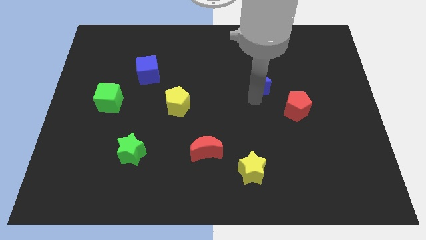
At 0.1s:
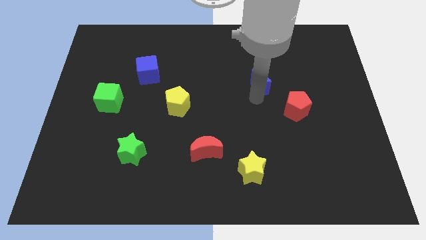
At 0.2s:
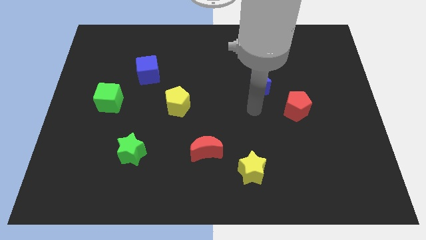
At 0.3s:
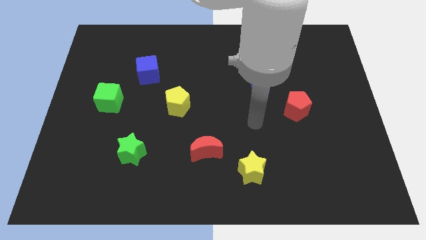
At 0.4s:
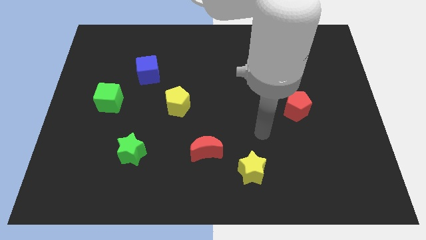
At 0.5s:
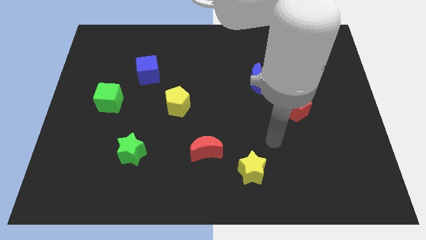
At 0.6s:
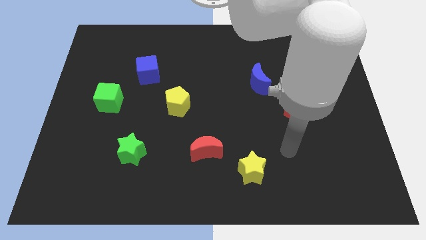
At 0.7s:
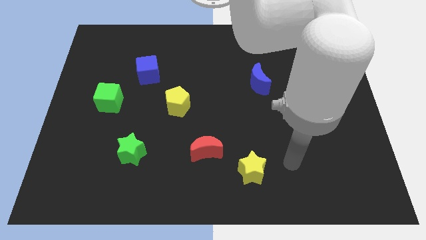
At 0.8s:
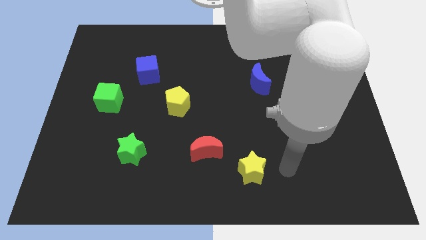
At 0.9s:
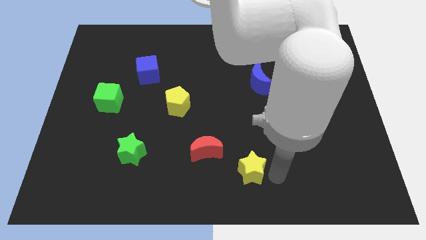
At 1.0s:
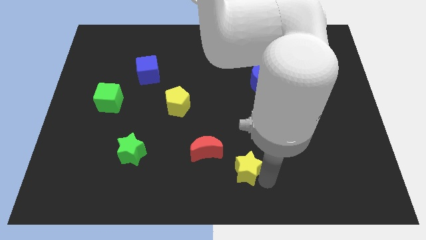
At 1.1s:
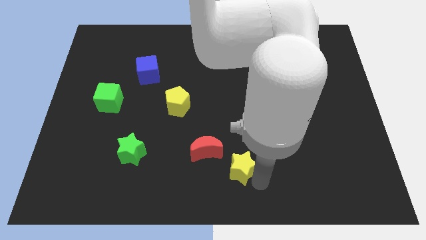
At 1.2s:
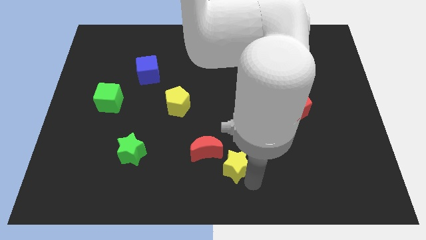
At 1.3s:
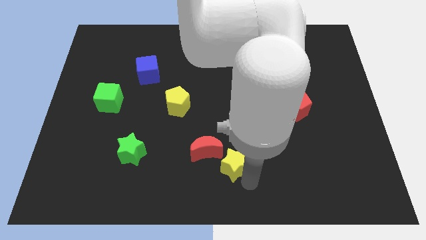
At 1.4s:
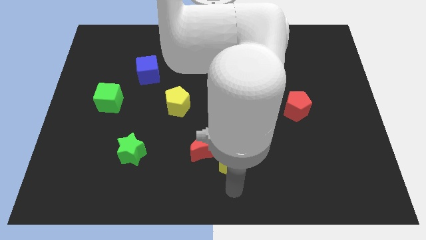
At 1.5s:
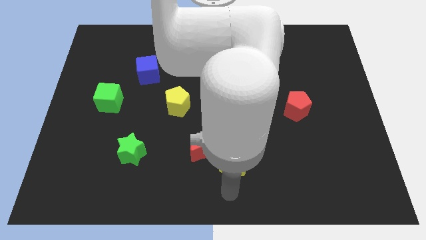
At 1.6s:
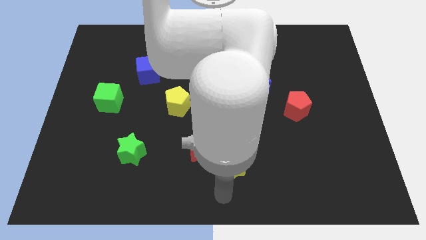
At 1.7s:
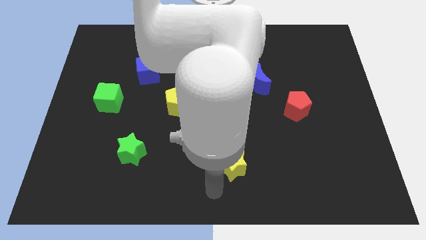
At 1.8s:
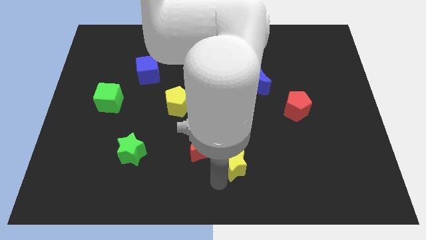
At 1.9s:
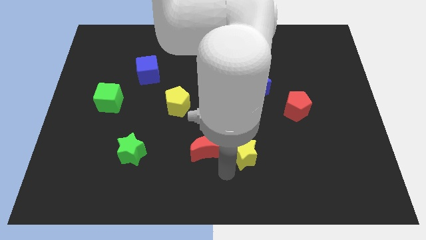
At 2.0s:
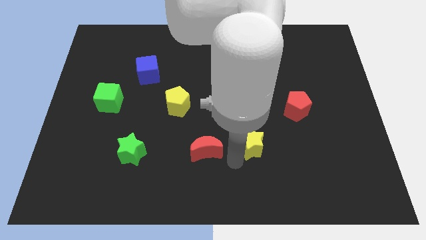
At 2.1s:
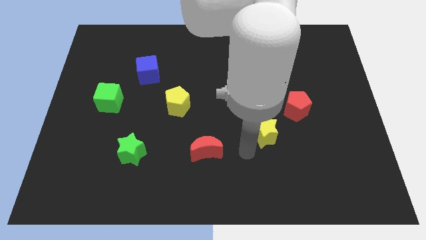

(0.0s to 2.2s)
place yellow star right to red moon

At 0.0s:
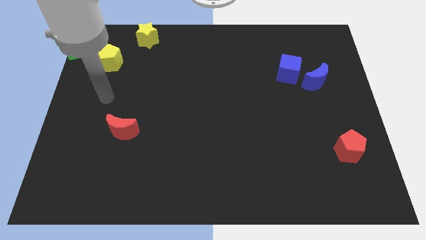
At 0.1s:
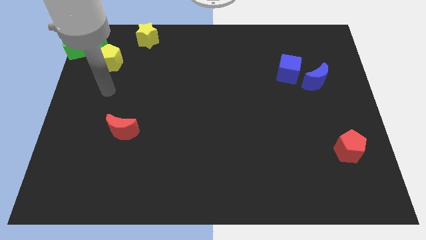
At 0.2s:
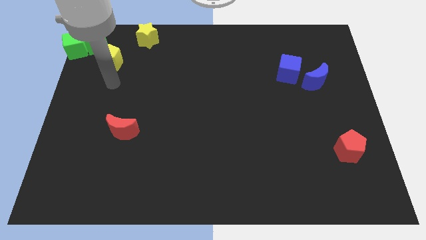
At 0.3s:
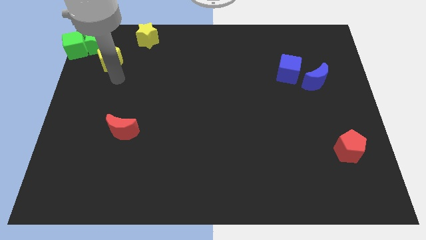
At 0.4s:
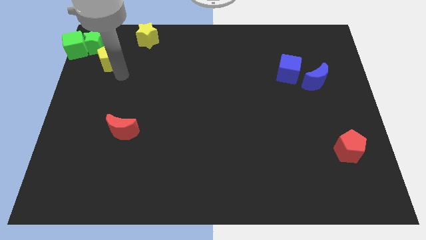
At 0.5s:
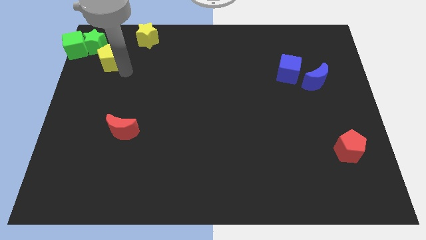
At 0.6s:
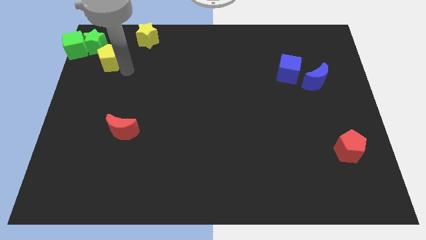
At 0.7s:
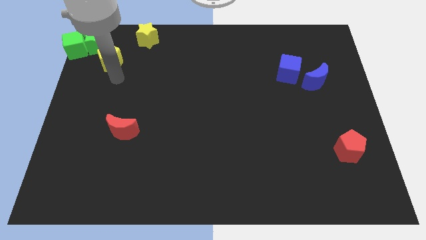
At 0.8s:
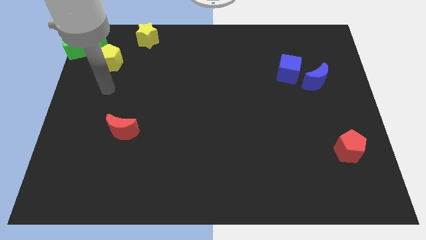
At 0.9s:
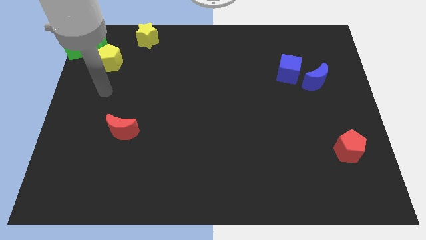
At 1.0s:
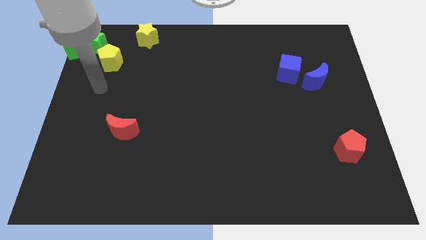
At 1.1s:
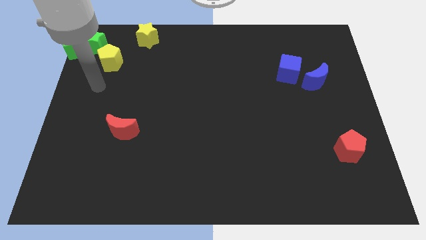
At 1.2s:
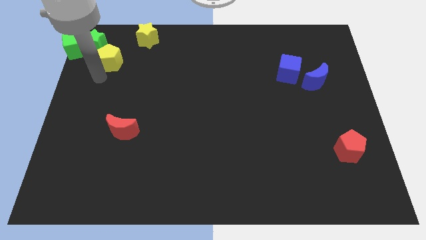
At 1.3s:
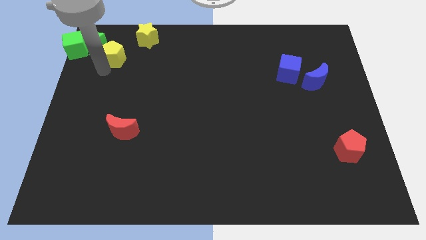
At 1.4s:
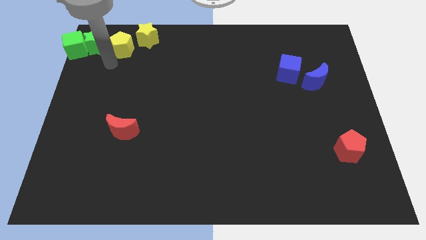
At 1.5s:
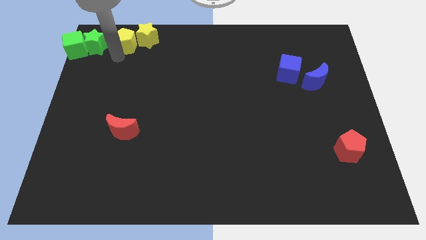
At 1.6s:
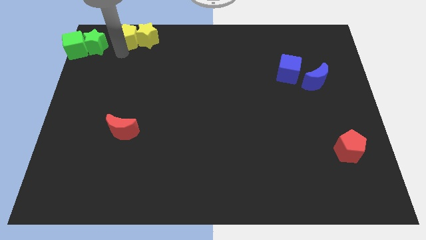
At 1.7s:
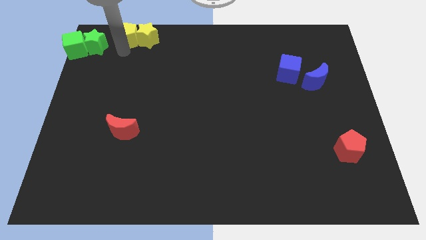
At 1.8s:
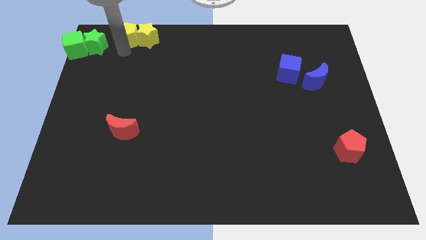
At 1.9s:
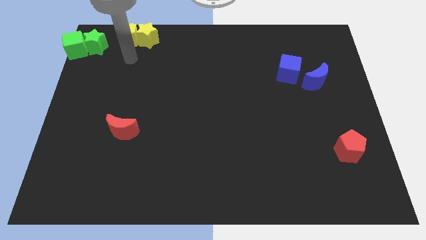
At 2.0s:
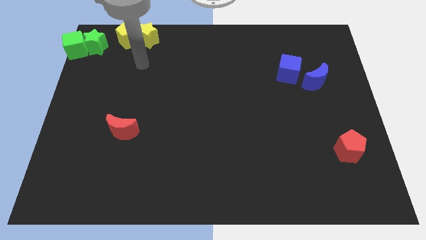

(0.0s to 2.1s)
move the yellow pentagon to the left side of yellow star

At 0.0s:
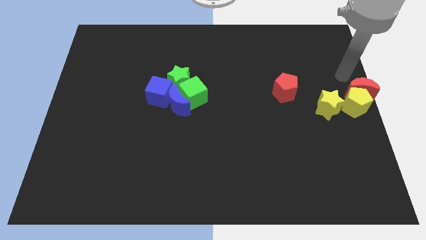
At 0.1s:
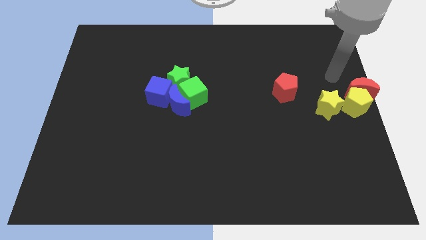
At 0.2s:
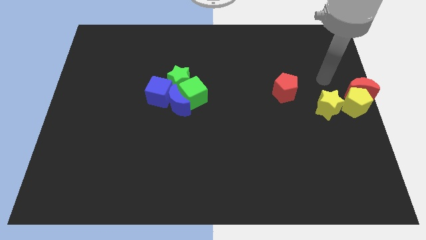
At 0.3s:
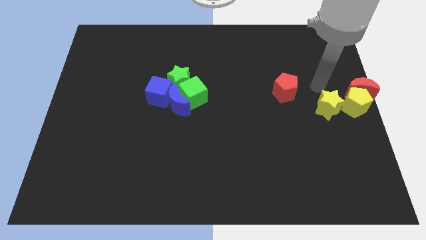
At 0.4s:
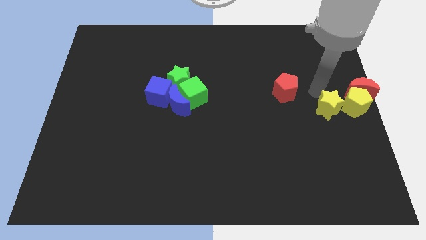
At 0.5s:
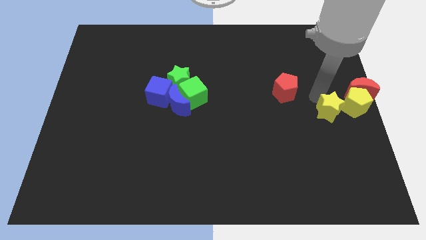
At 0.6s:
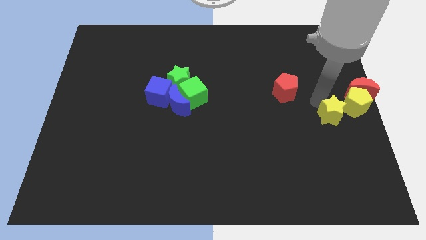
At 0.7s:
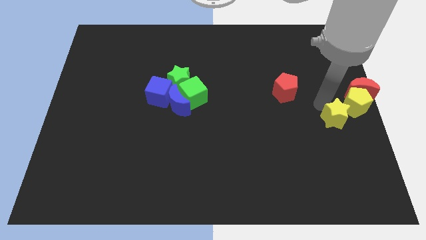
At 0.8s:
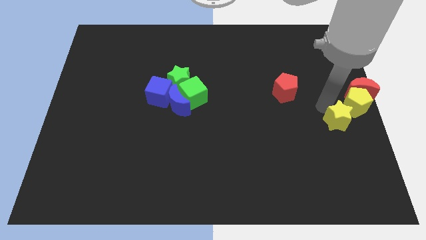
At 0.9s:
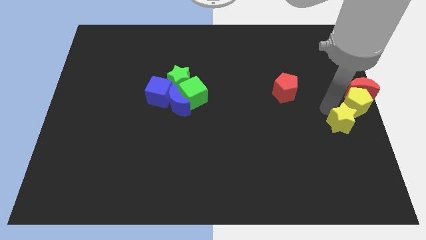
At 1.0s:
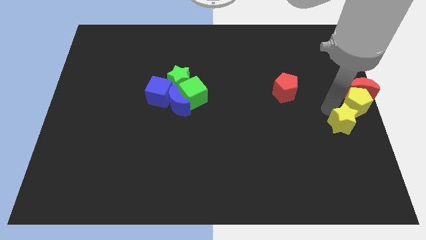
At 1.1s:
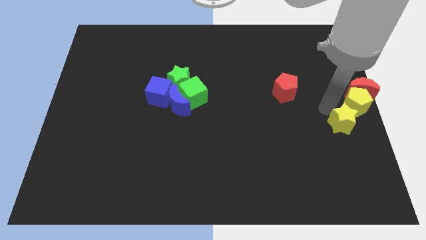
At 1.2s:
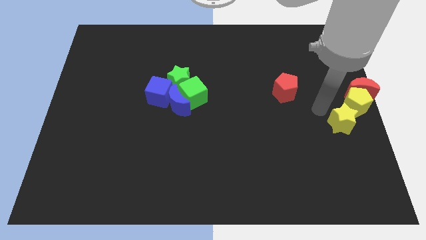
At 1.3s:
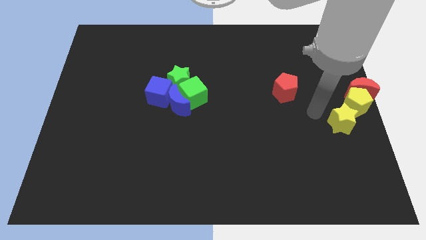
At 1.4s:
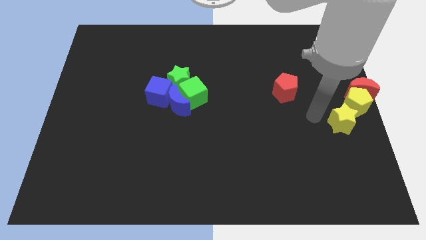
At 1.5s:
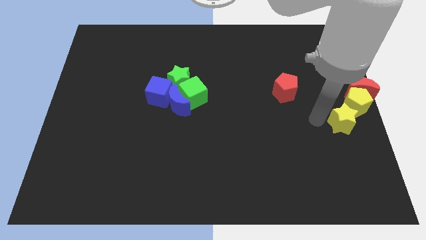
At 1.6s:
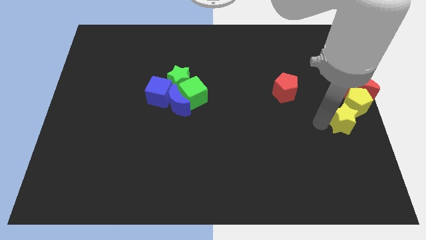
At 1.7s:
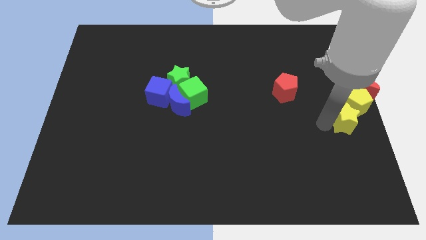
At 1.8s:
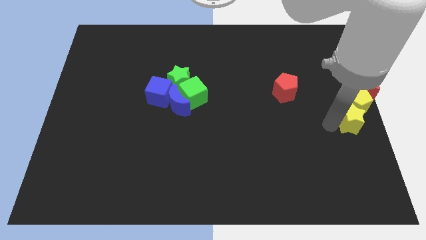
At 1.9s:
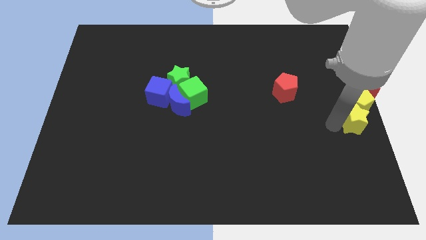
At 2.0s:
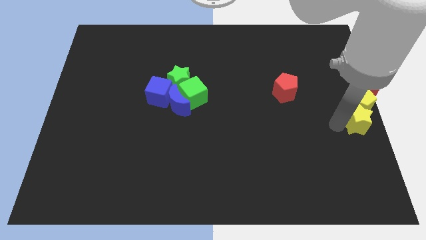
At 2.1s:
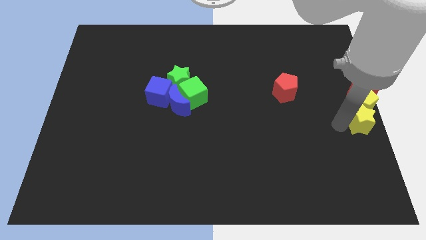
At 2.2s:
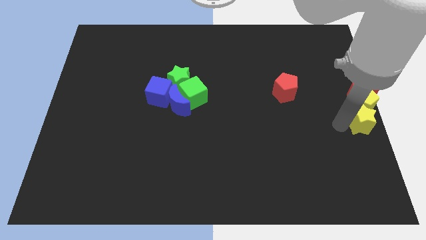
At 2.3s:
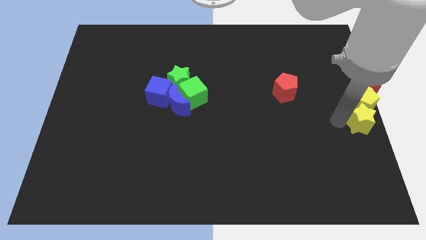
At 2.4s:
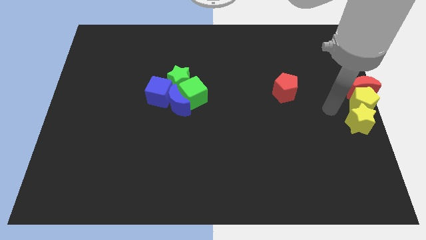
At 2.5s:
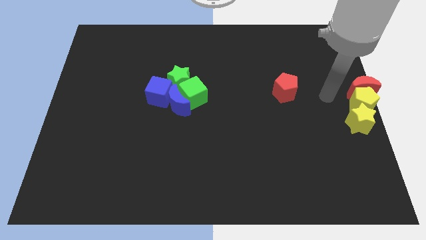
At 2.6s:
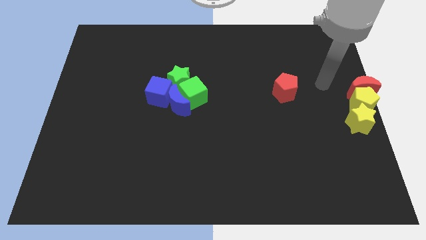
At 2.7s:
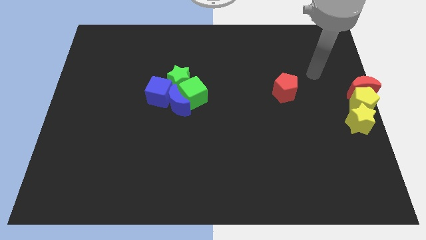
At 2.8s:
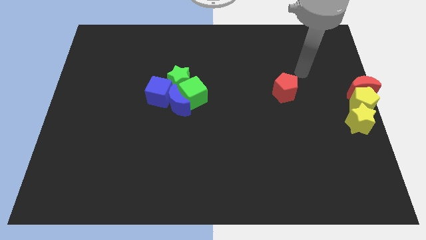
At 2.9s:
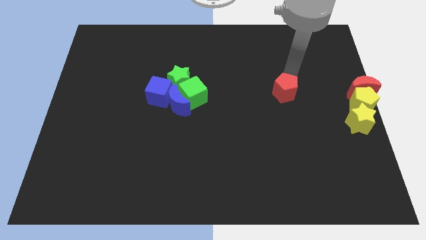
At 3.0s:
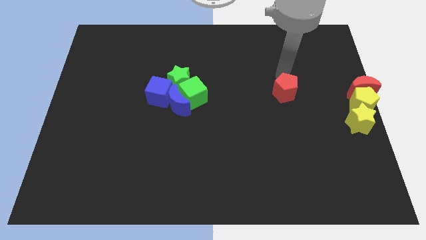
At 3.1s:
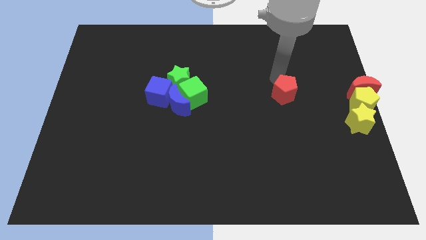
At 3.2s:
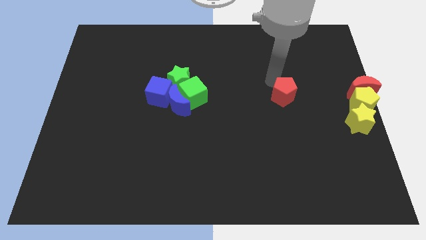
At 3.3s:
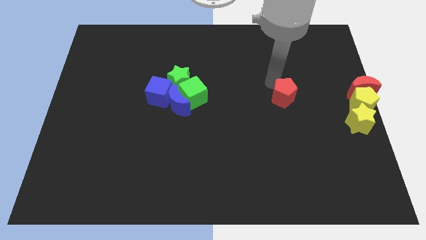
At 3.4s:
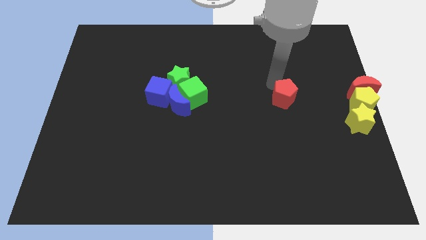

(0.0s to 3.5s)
move the yellow star to the bottom of the yellow pentagon

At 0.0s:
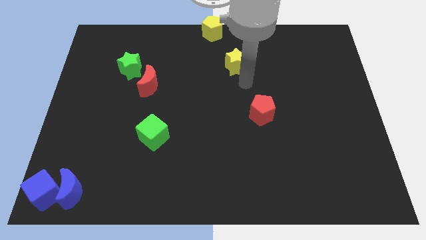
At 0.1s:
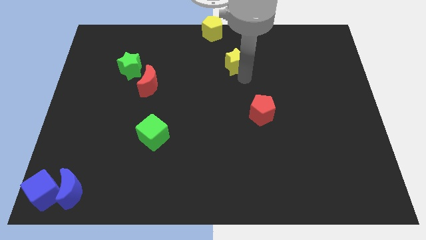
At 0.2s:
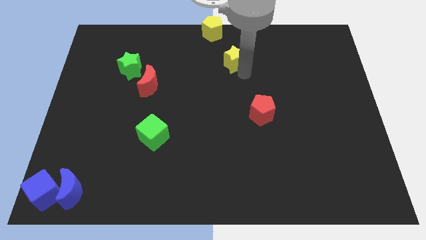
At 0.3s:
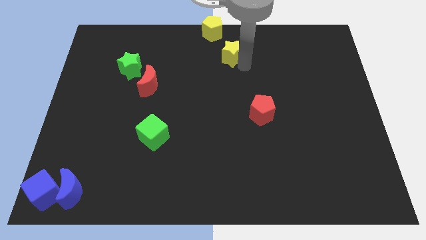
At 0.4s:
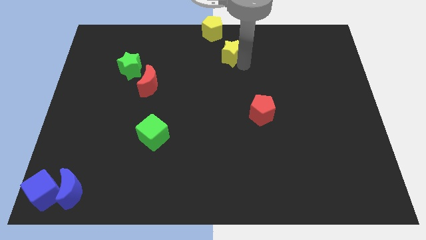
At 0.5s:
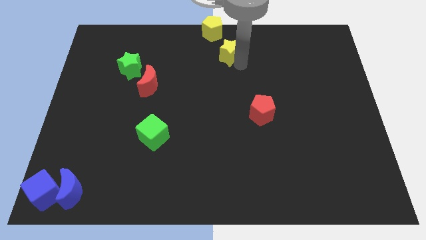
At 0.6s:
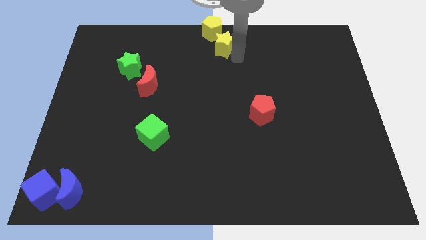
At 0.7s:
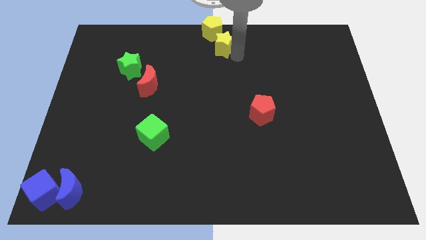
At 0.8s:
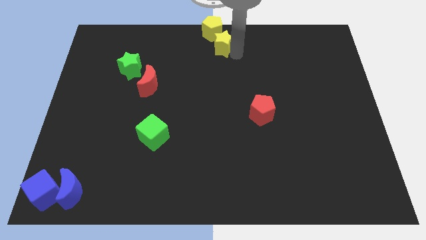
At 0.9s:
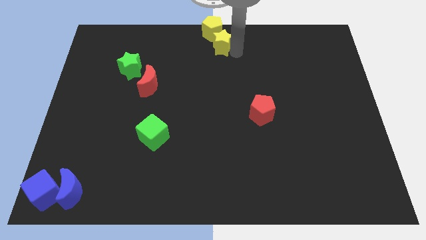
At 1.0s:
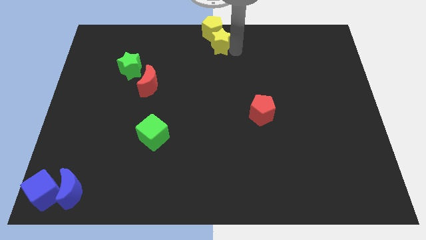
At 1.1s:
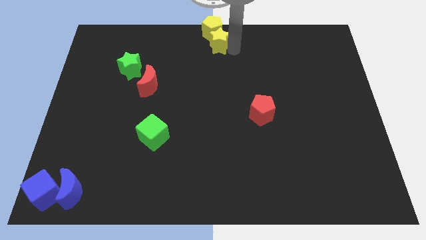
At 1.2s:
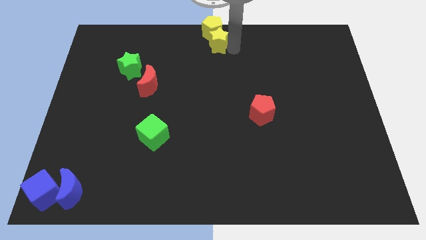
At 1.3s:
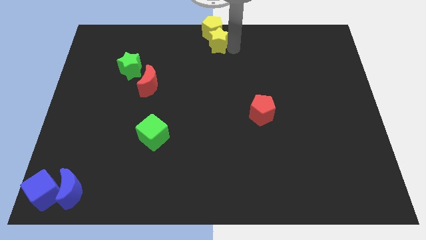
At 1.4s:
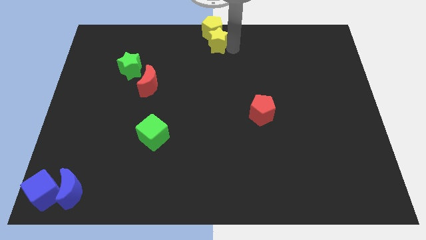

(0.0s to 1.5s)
push the yellow star into the yellow pentagon to the top center of the board
